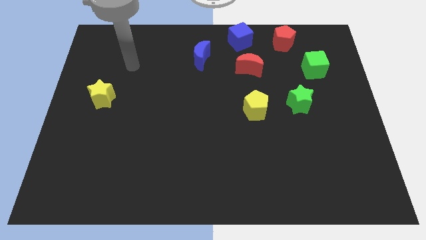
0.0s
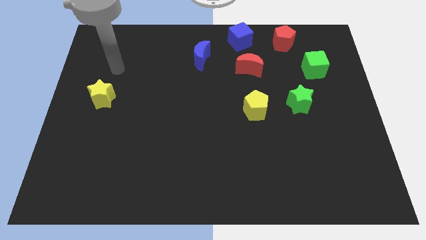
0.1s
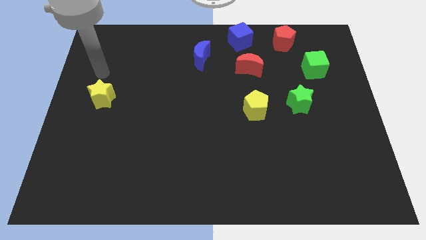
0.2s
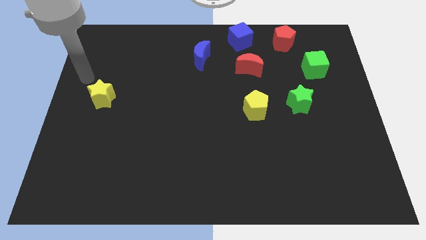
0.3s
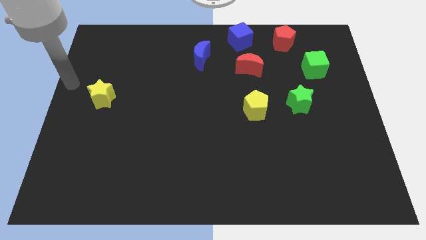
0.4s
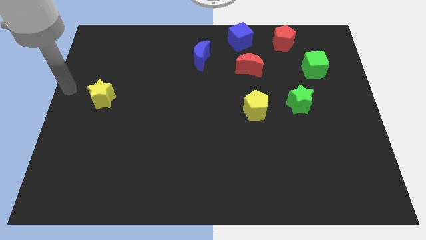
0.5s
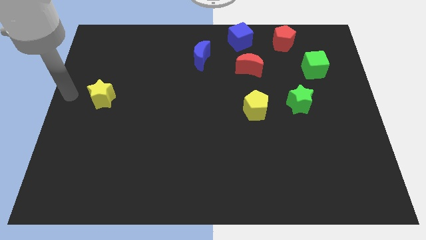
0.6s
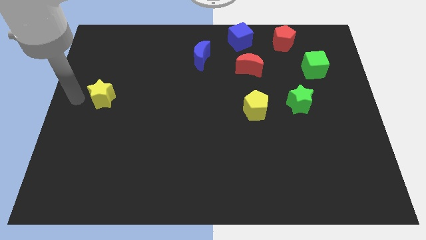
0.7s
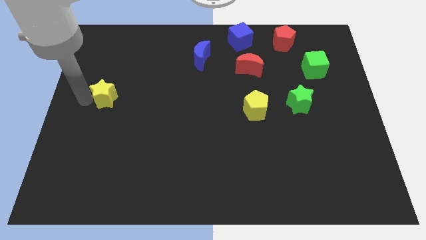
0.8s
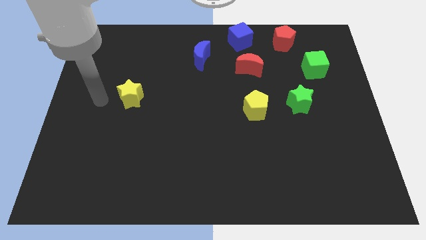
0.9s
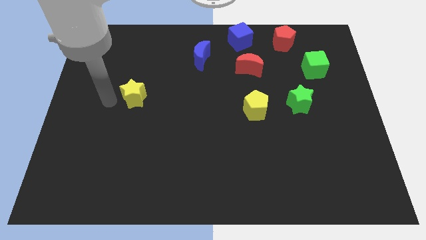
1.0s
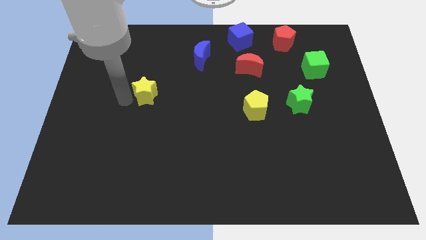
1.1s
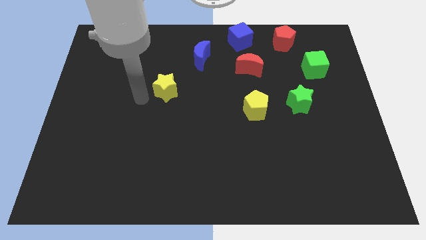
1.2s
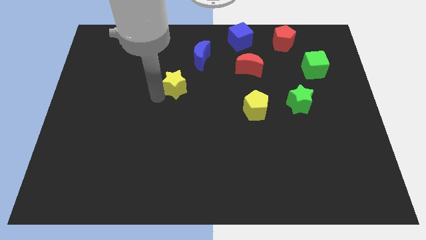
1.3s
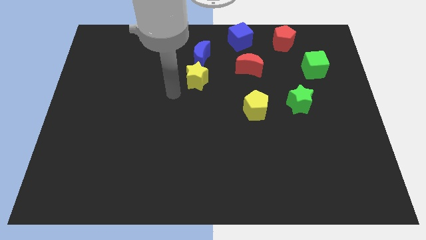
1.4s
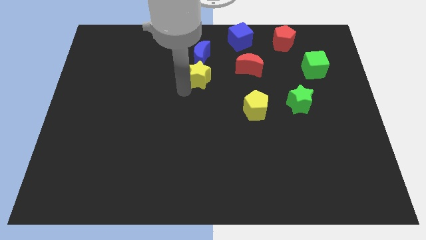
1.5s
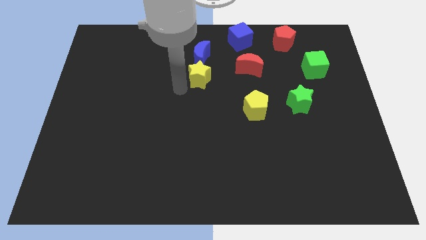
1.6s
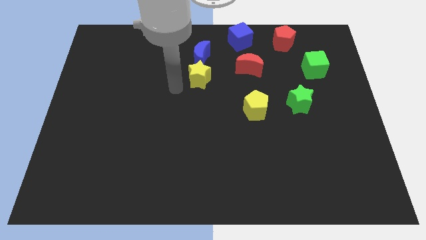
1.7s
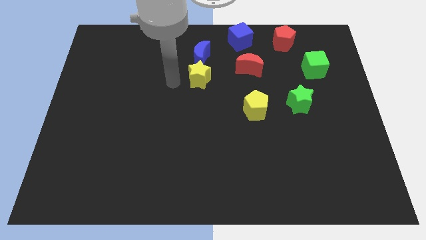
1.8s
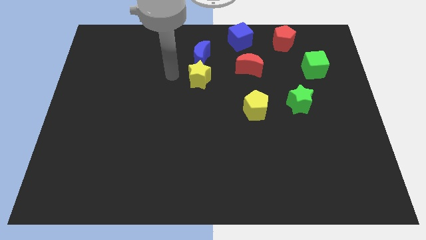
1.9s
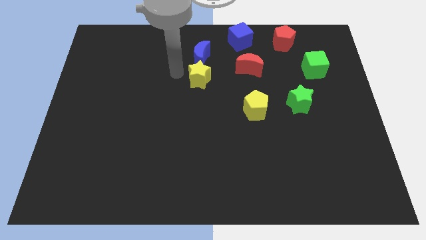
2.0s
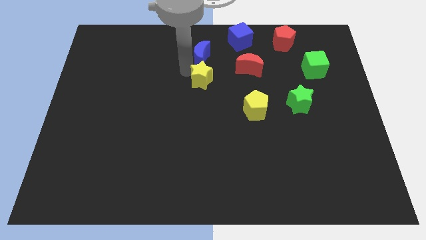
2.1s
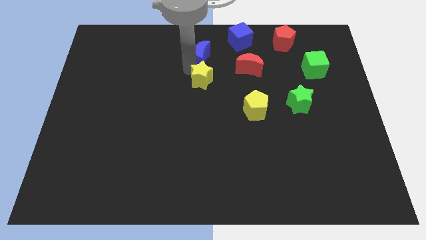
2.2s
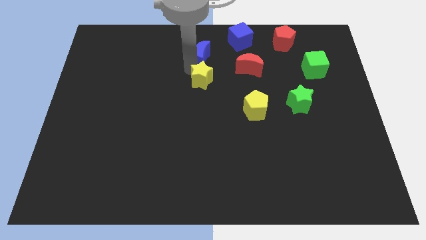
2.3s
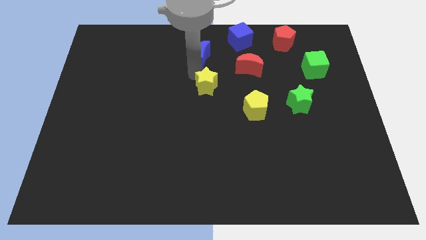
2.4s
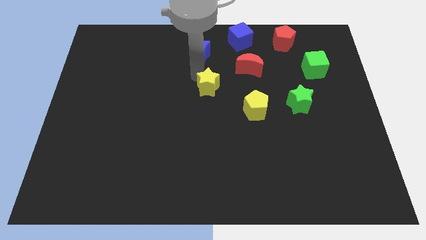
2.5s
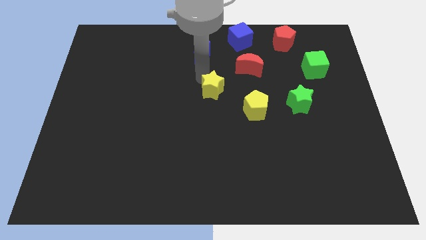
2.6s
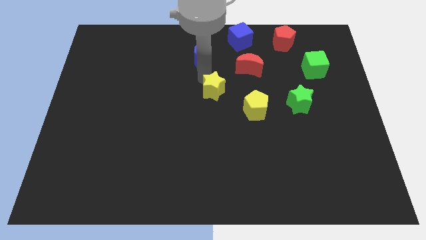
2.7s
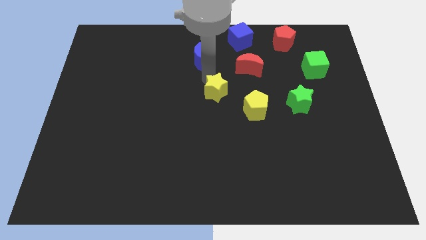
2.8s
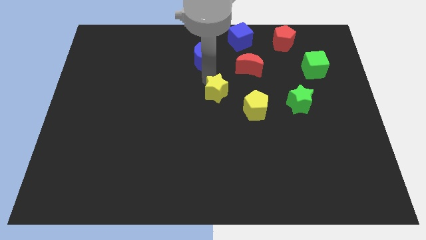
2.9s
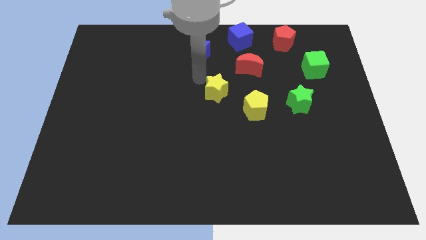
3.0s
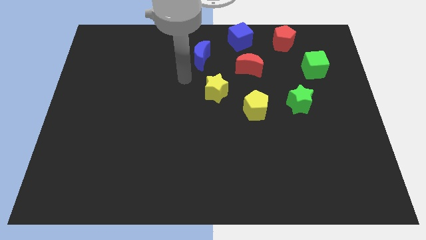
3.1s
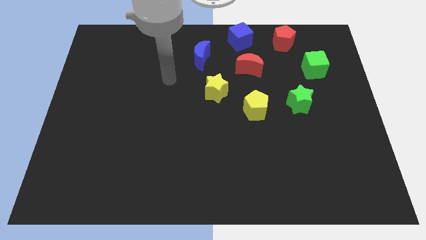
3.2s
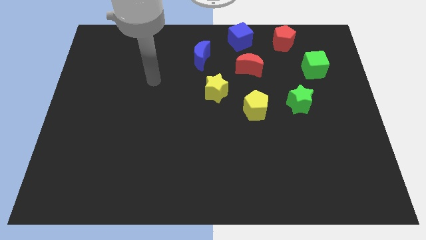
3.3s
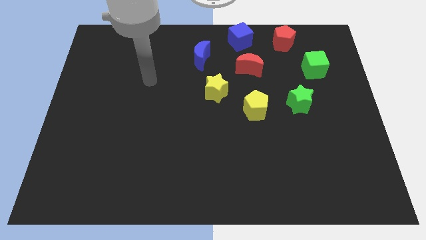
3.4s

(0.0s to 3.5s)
push the yellow star to the top left diagonal of the yellow pentagon

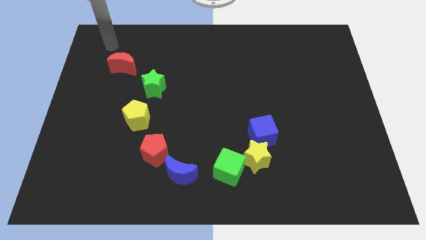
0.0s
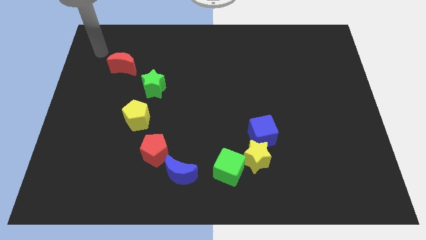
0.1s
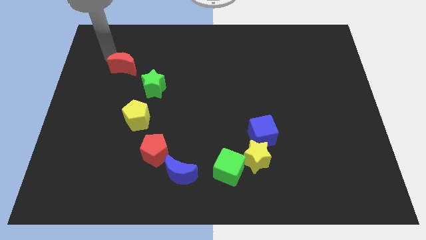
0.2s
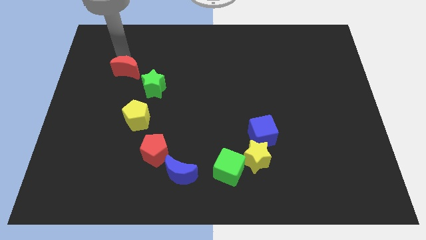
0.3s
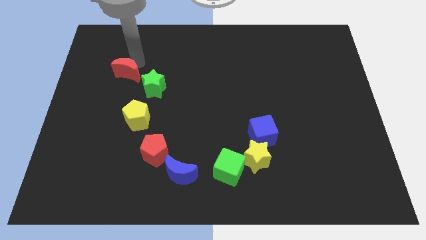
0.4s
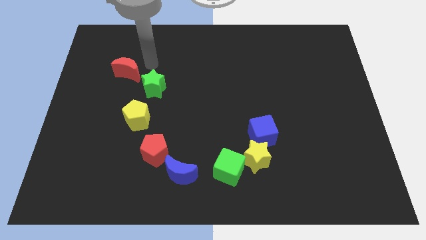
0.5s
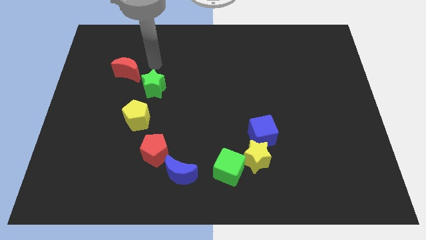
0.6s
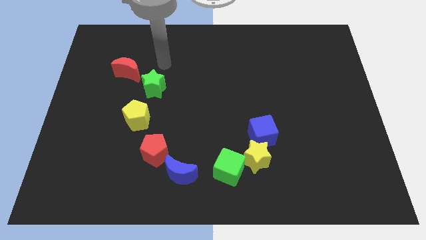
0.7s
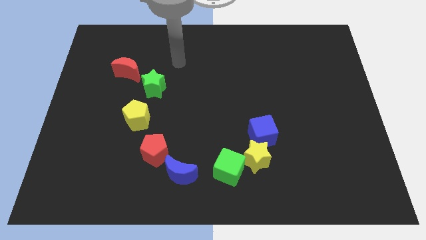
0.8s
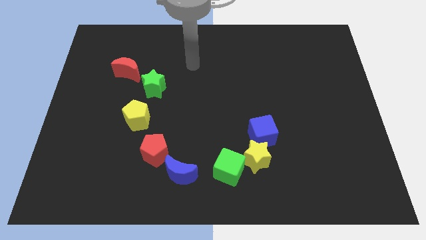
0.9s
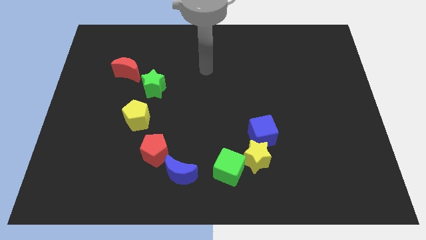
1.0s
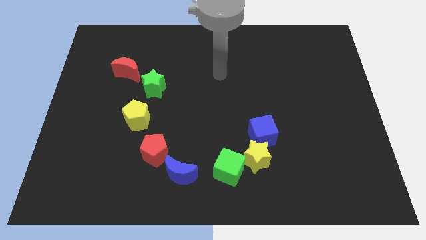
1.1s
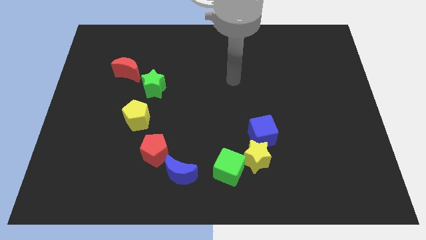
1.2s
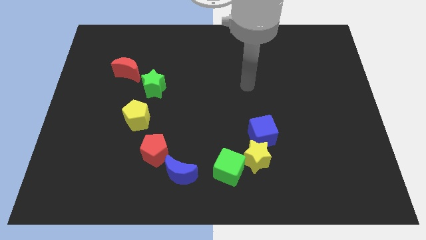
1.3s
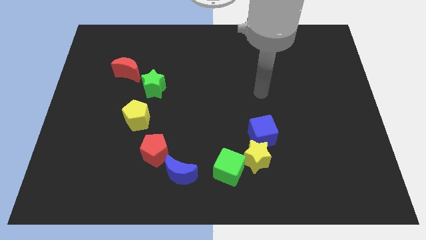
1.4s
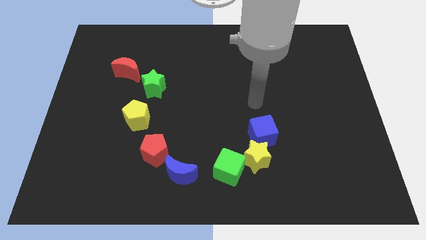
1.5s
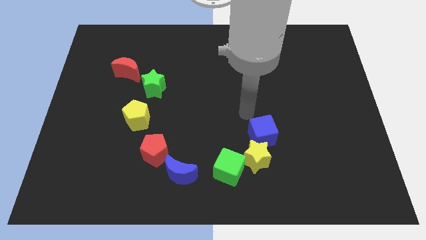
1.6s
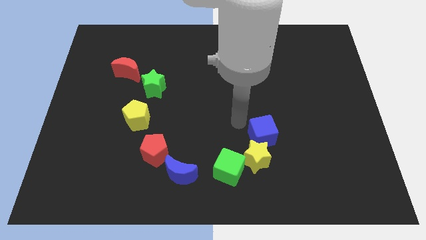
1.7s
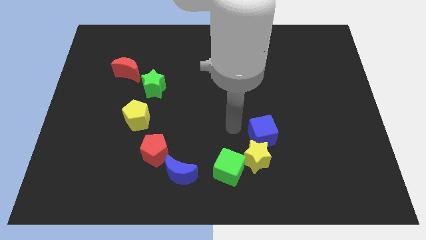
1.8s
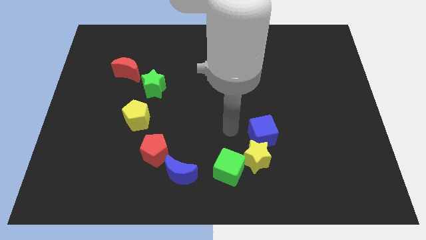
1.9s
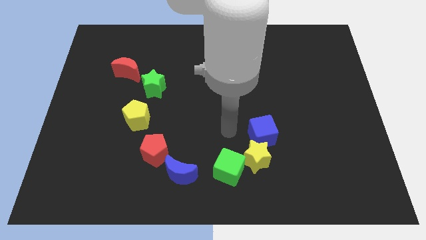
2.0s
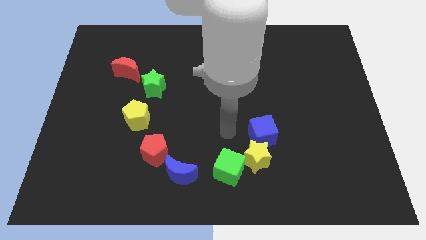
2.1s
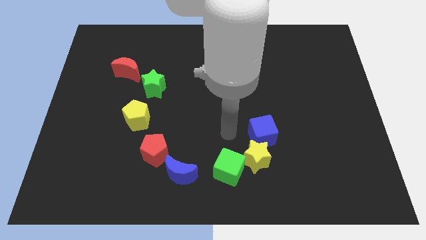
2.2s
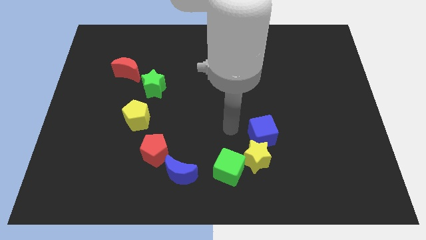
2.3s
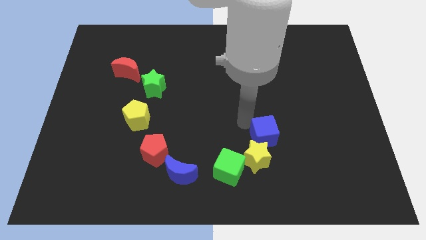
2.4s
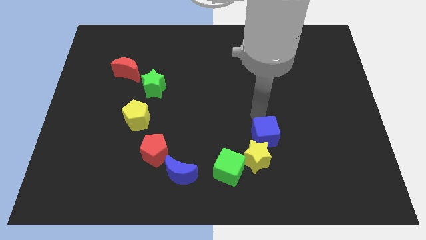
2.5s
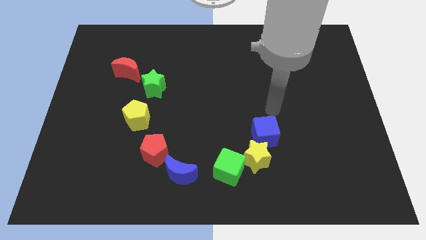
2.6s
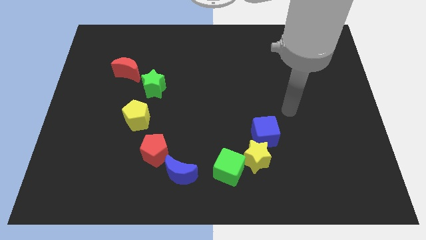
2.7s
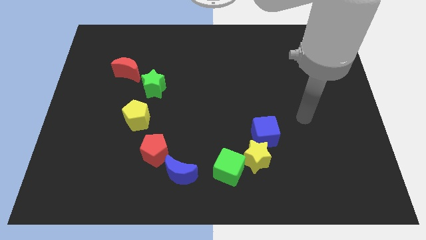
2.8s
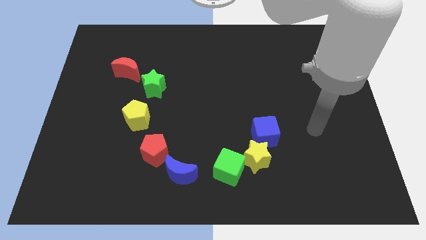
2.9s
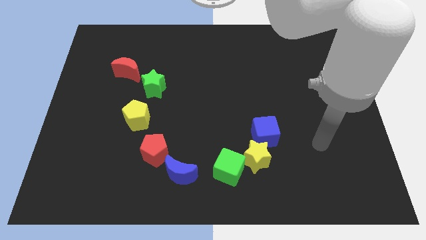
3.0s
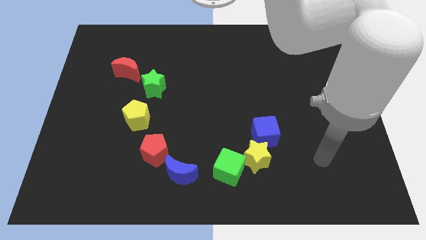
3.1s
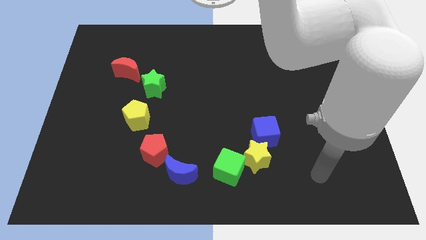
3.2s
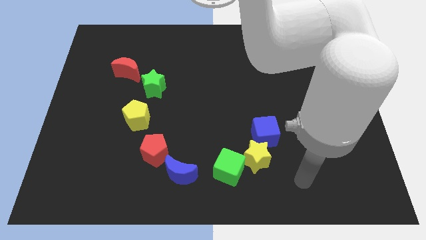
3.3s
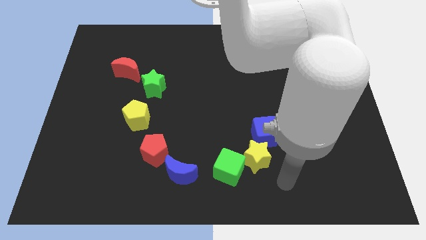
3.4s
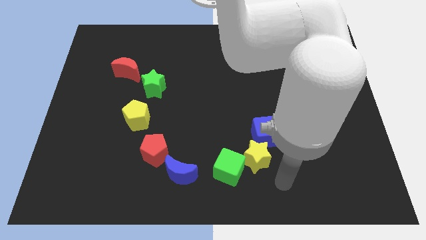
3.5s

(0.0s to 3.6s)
move your arm away from the red moon

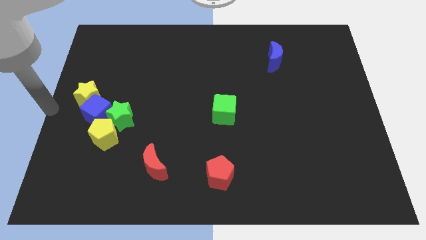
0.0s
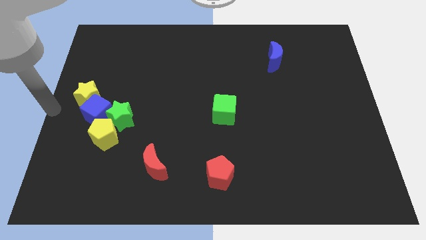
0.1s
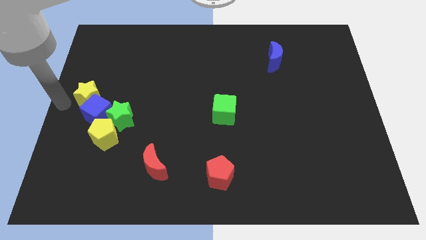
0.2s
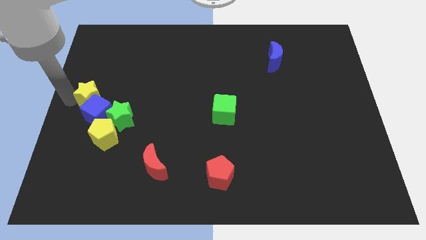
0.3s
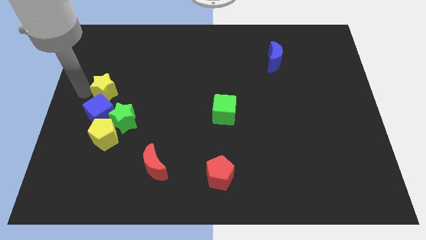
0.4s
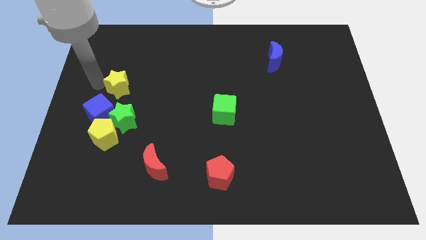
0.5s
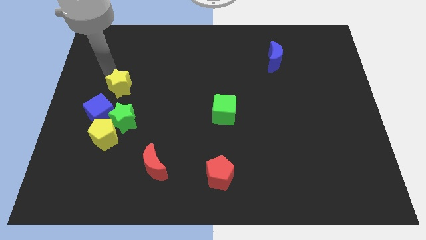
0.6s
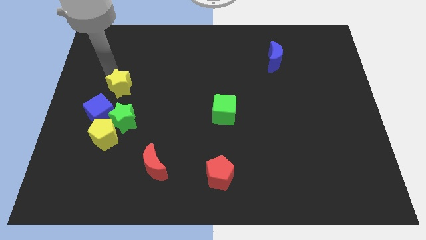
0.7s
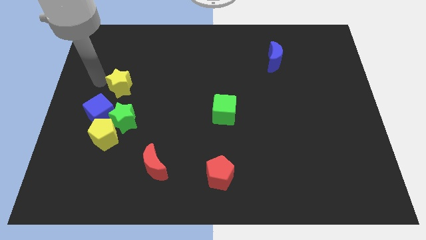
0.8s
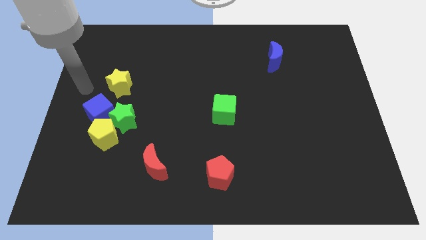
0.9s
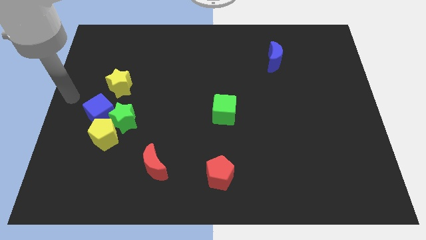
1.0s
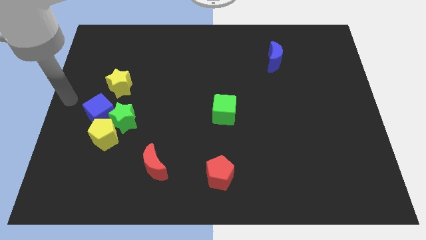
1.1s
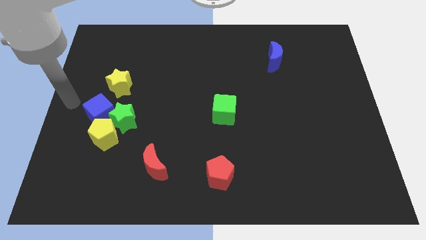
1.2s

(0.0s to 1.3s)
push the yellow star to the top side of the green star

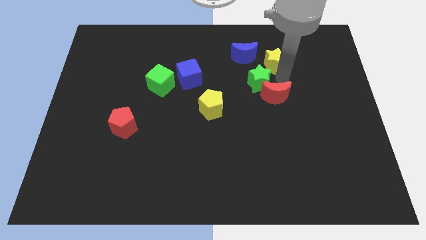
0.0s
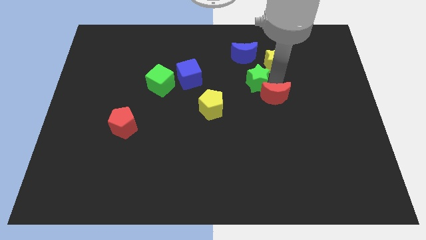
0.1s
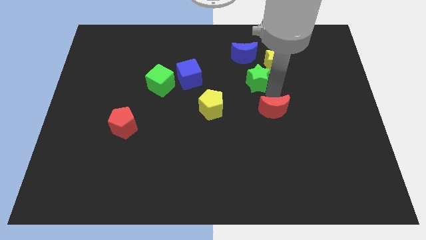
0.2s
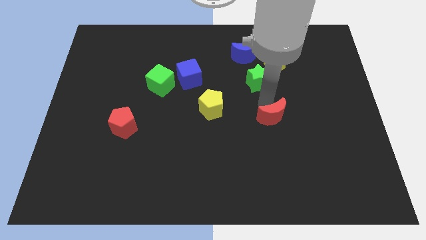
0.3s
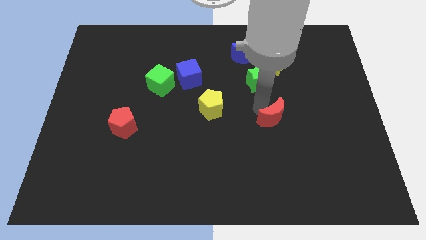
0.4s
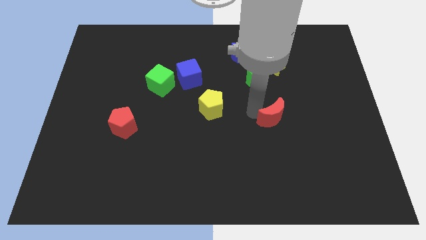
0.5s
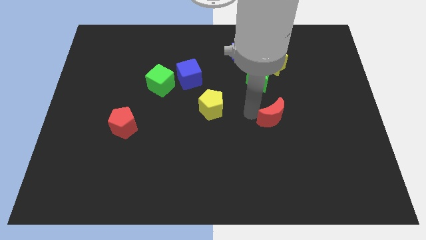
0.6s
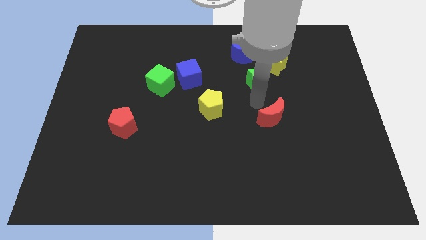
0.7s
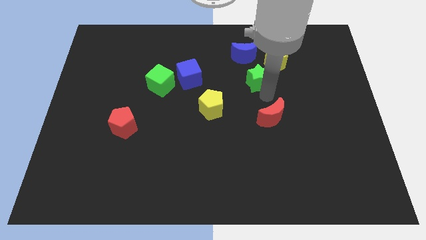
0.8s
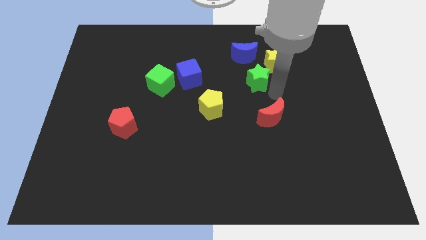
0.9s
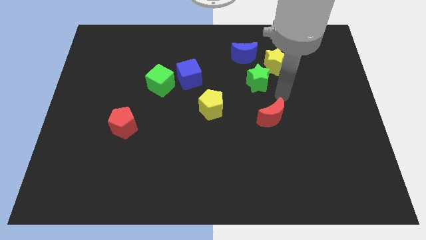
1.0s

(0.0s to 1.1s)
move the red moon towards the bottom
